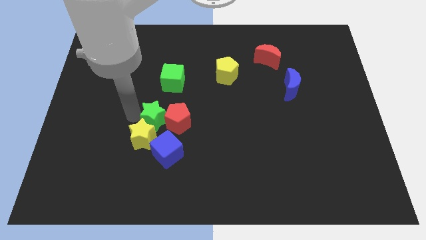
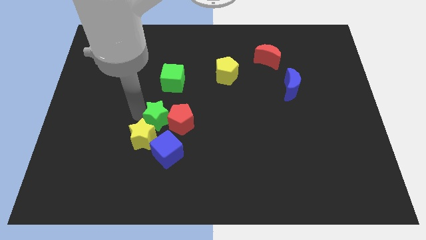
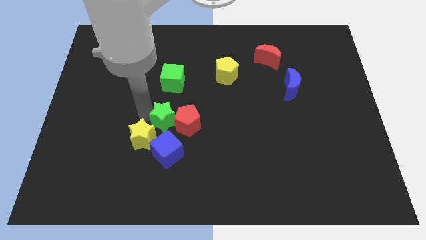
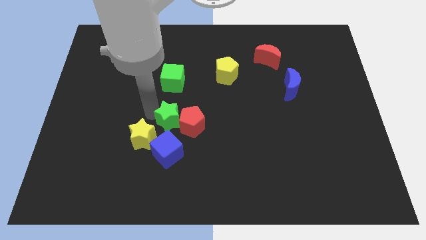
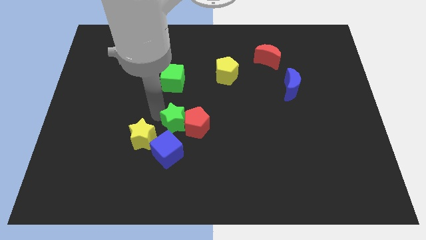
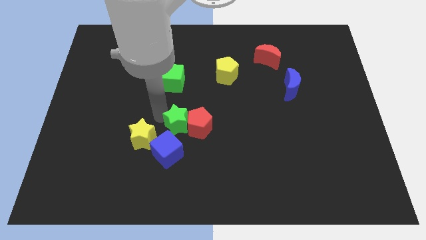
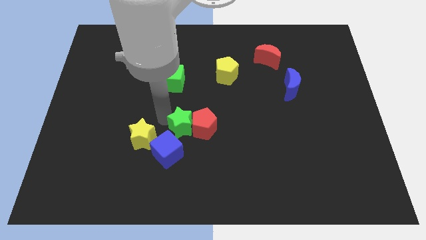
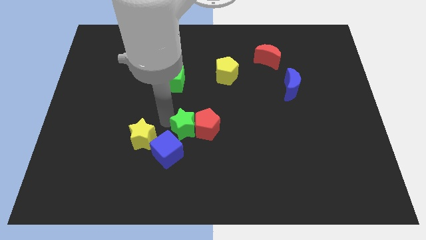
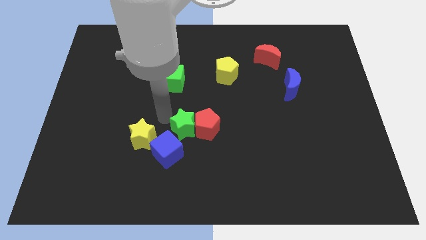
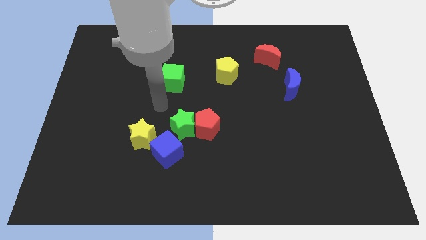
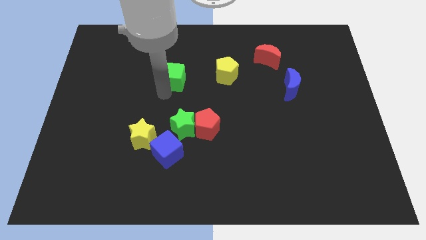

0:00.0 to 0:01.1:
move the green star and red pentagon to bottom center

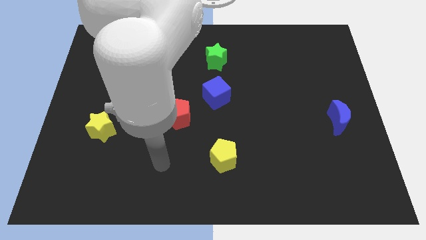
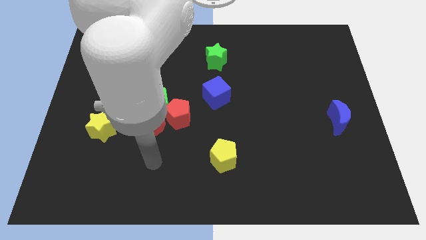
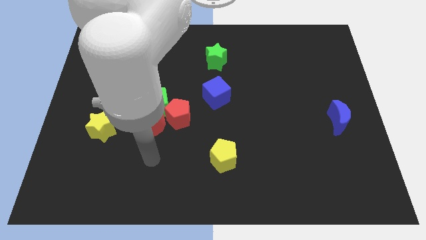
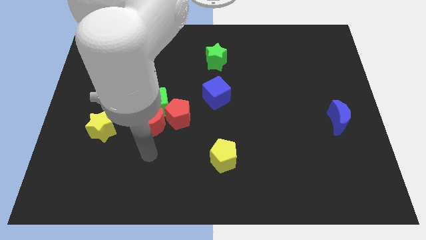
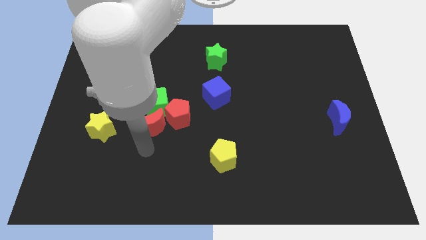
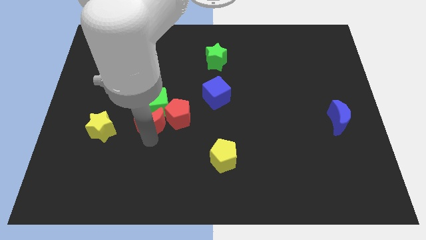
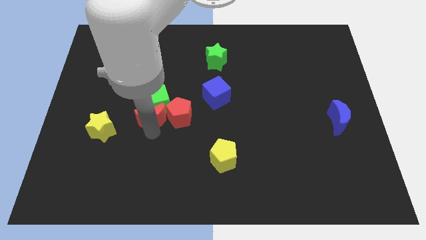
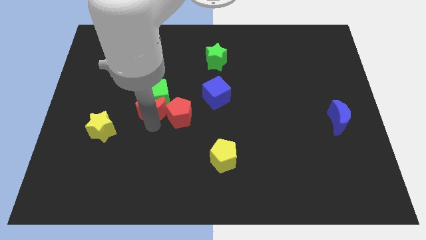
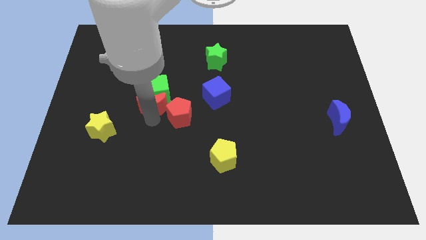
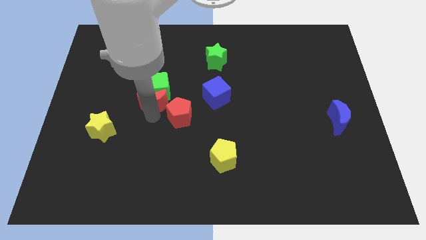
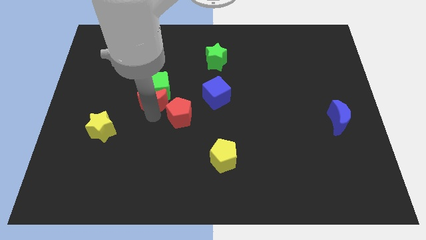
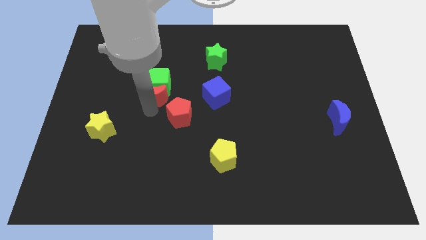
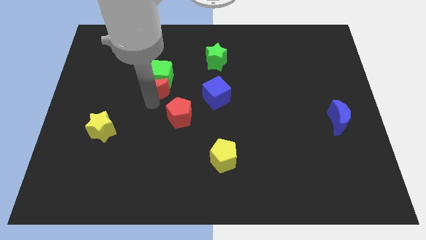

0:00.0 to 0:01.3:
push the red crescent into the green cube

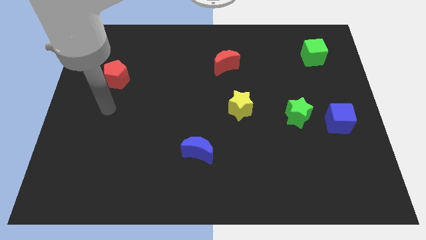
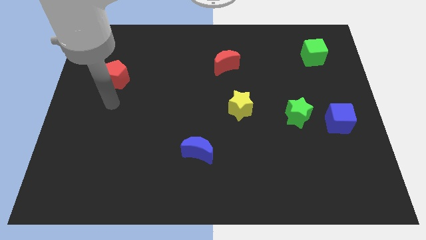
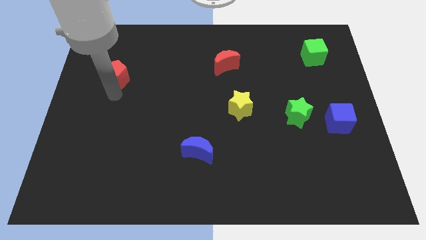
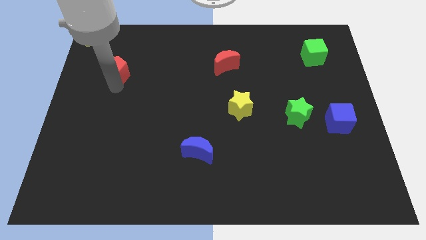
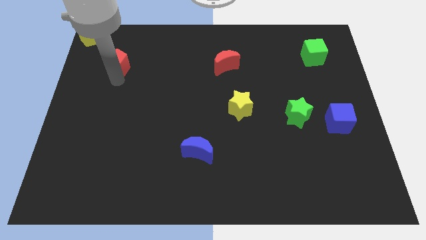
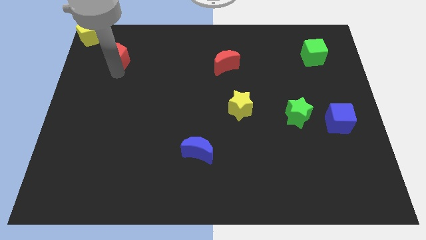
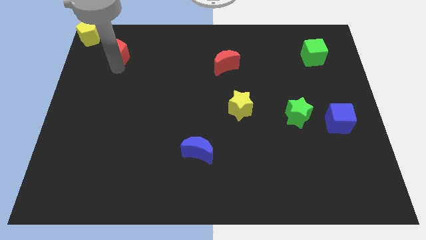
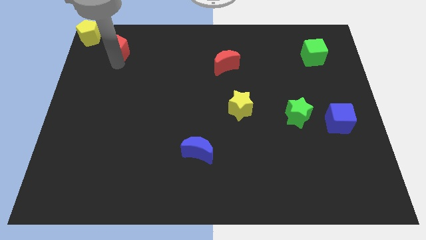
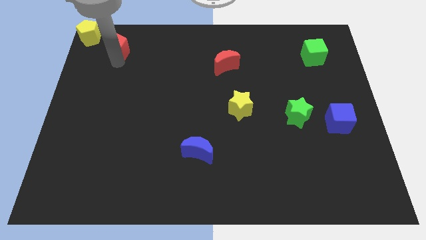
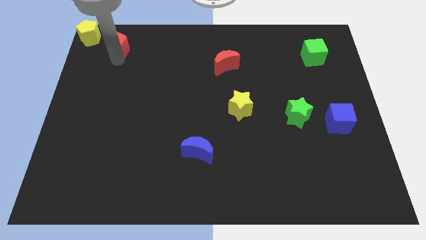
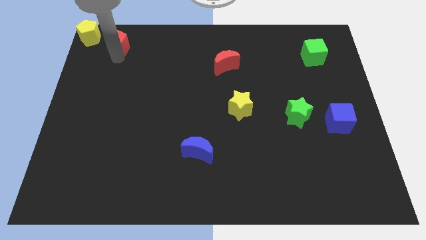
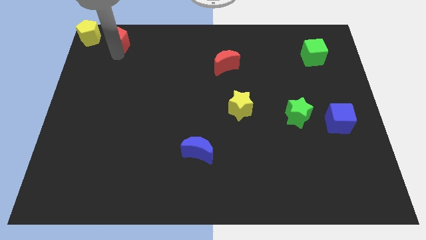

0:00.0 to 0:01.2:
place the red pentagon diagonally right to the yellow pentagon

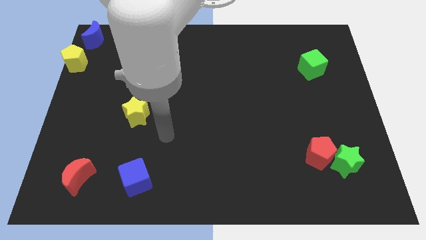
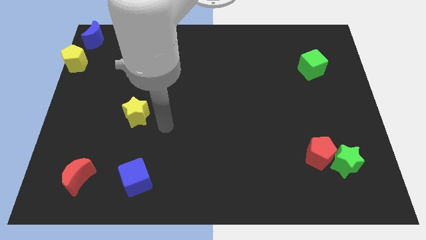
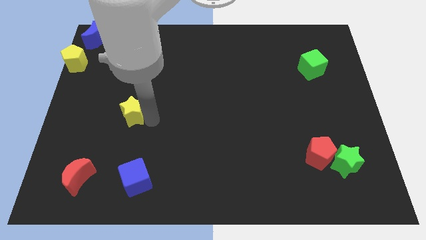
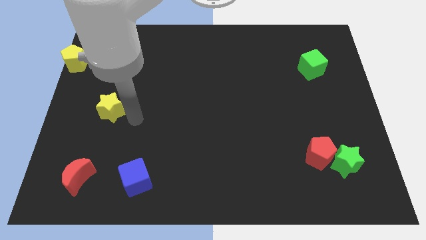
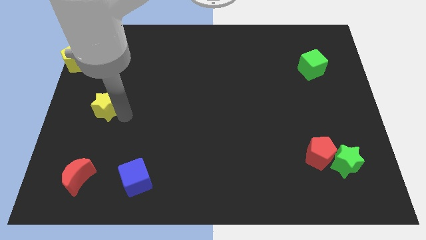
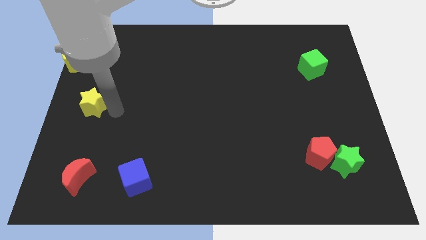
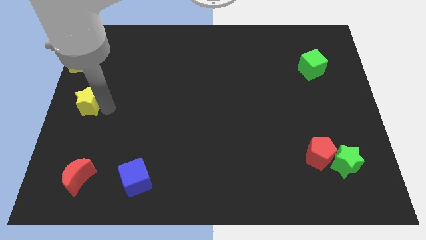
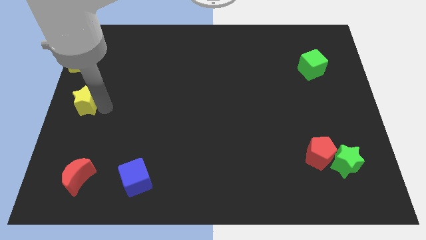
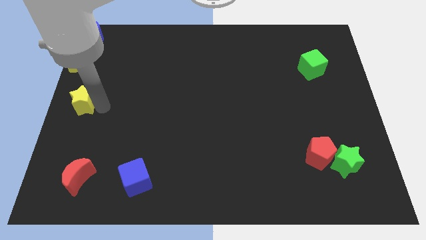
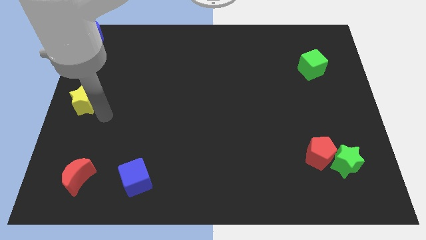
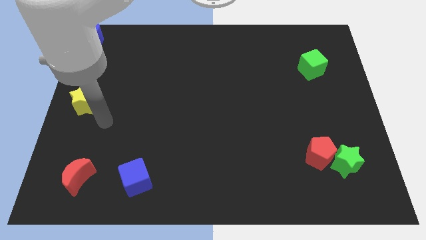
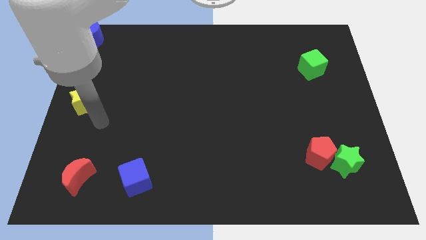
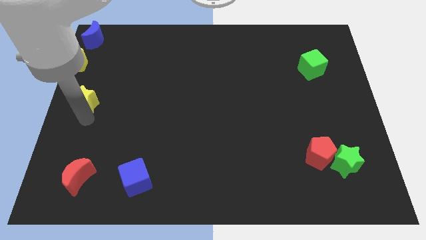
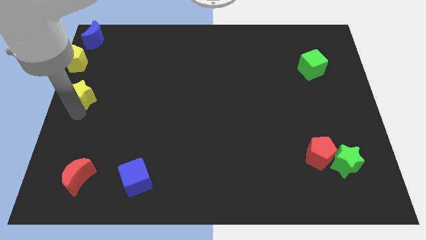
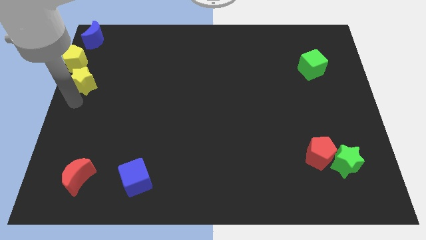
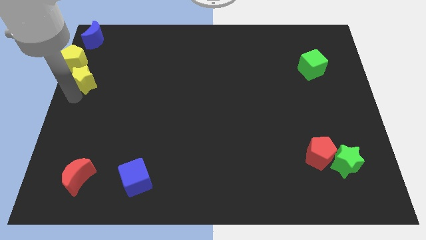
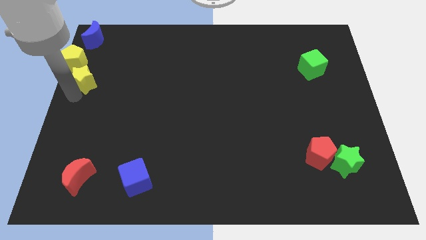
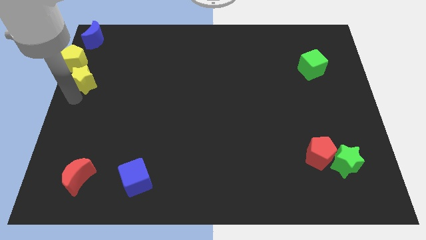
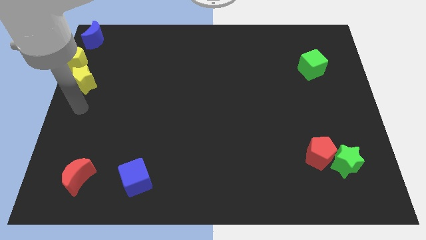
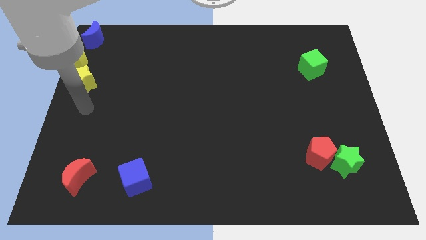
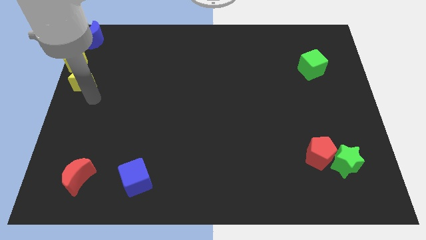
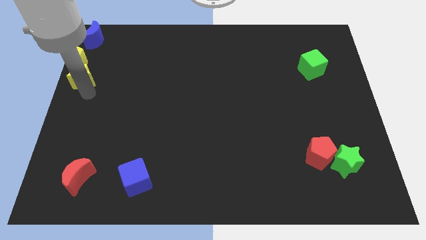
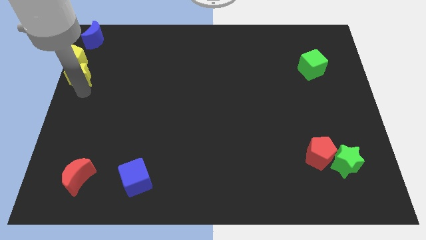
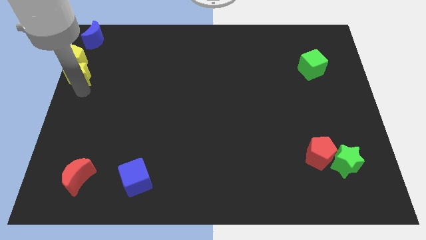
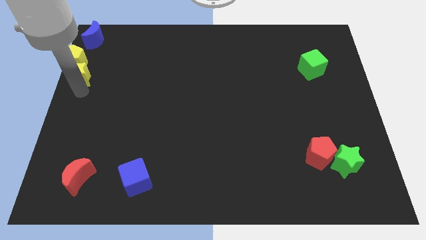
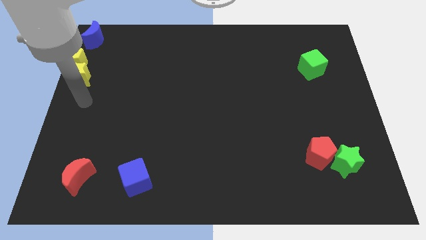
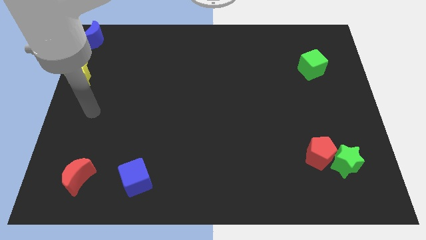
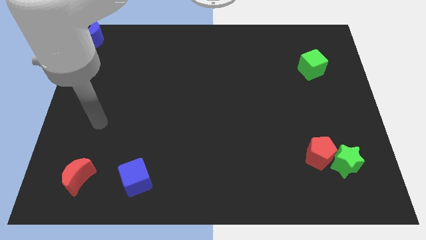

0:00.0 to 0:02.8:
put the yellow star below the yellow pentagon

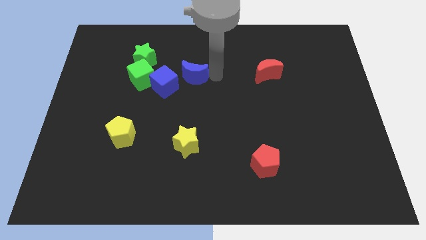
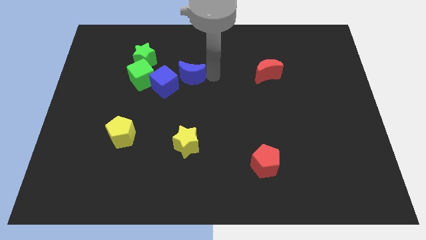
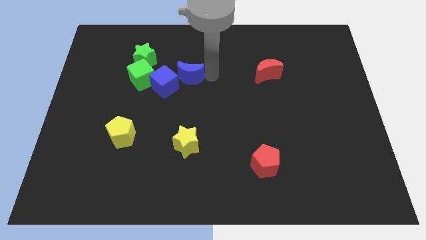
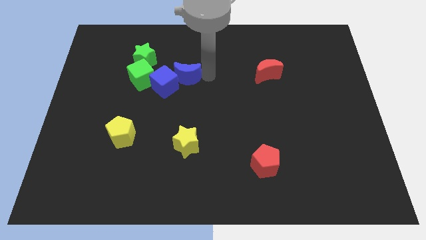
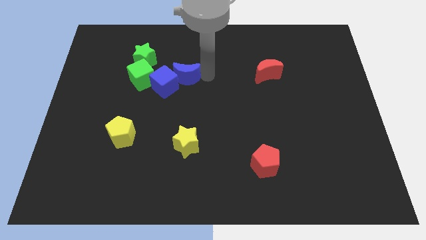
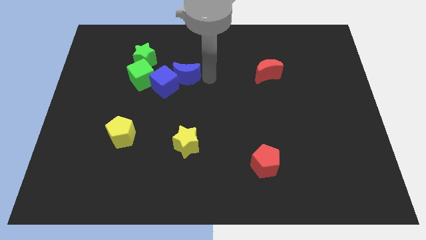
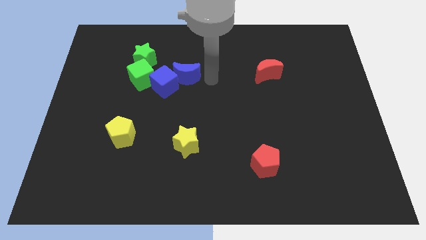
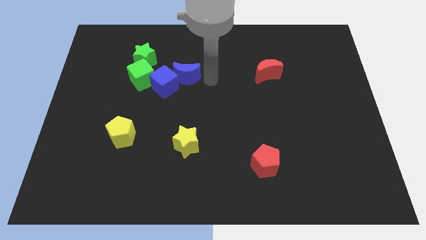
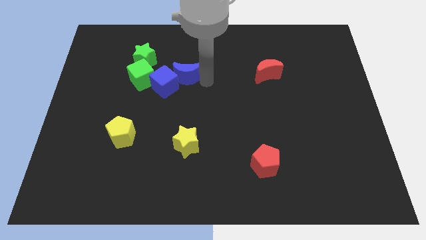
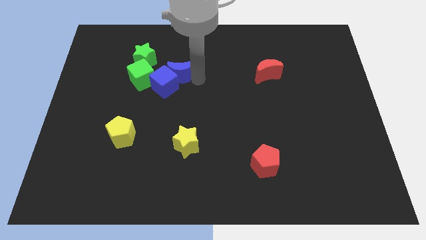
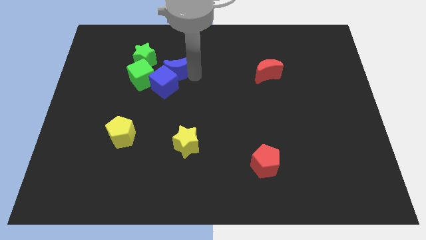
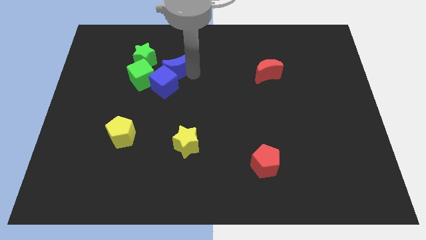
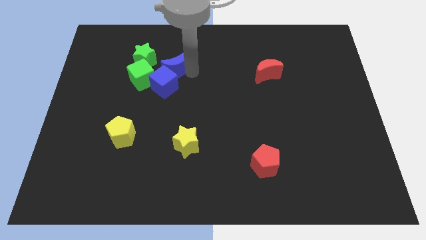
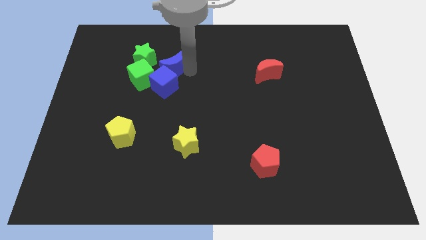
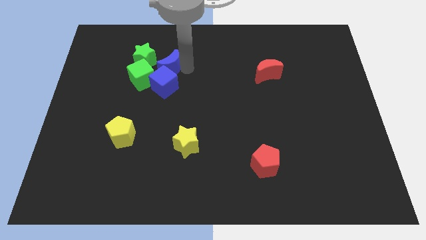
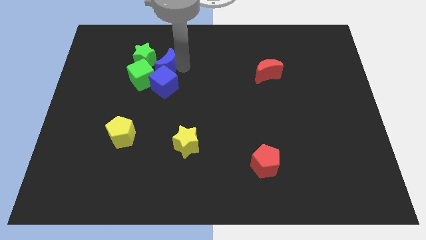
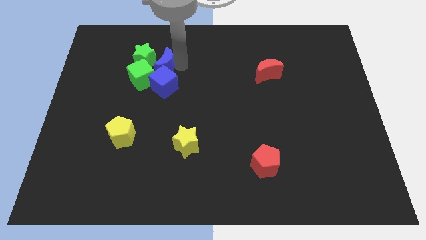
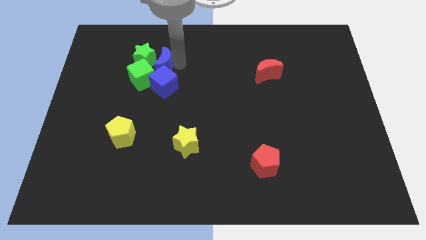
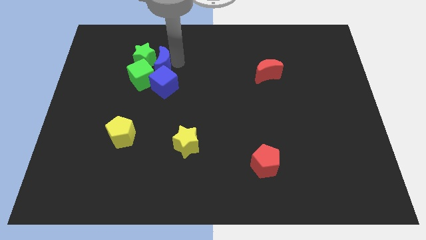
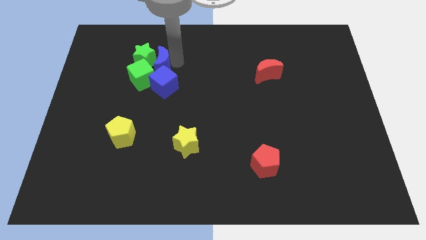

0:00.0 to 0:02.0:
move the blue crescent at the top side of the blue cube

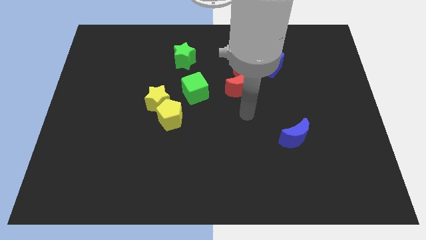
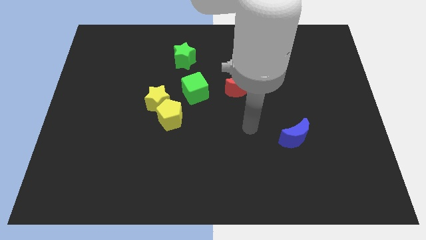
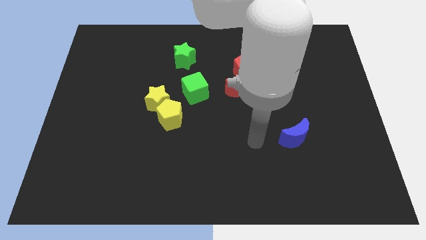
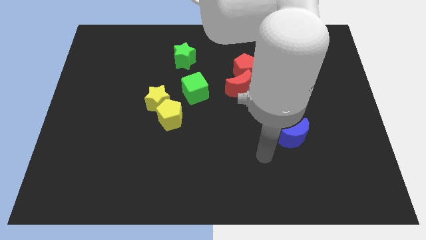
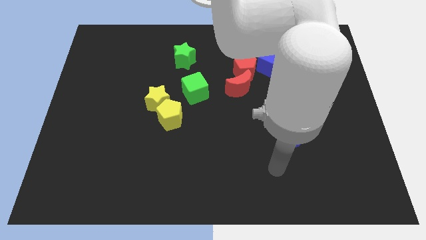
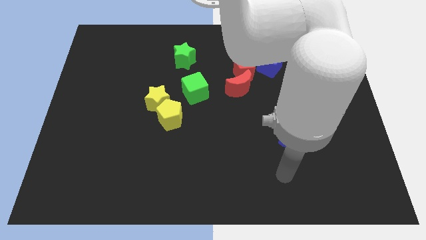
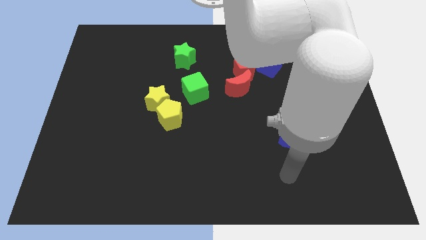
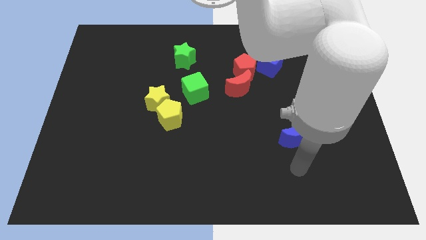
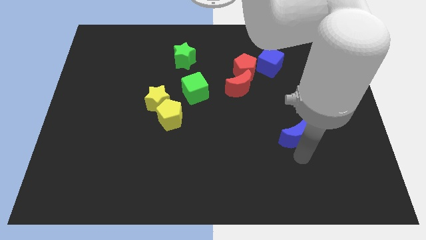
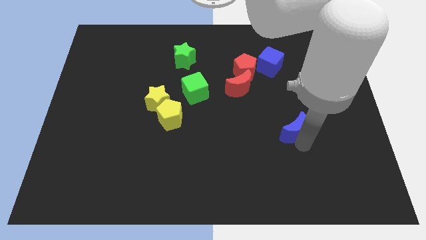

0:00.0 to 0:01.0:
point your arm at the bottom of the blue crescent
